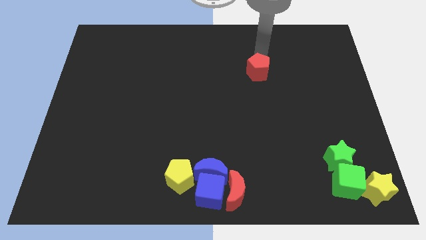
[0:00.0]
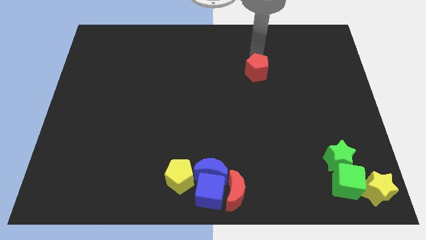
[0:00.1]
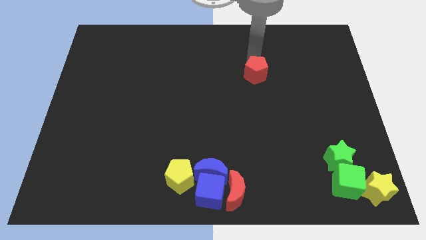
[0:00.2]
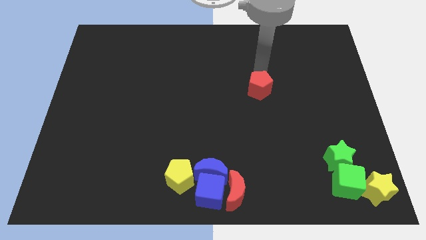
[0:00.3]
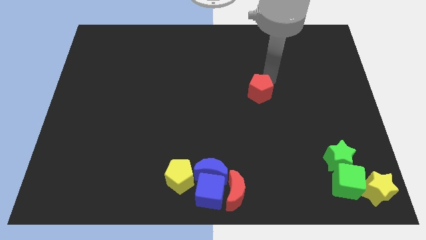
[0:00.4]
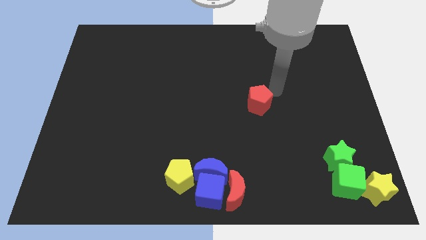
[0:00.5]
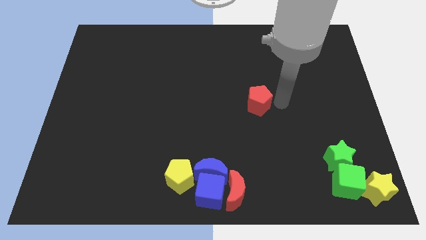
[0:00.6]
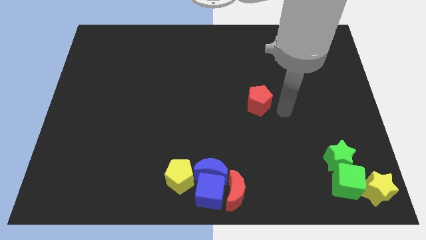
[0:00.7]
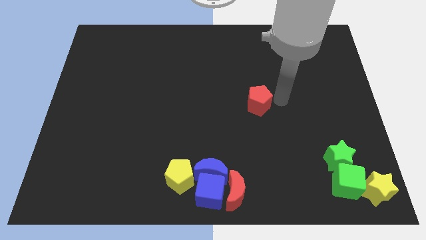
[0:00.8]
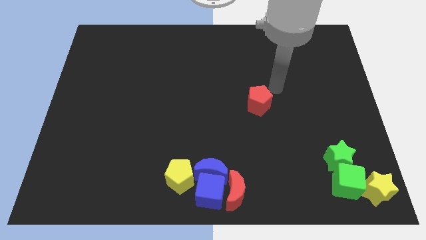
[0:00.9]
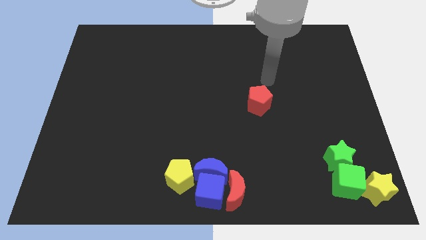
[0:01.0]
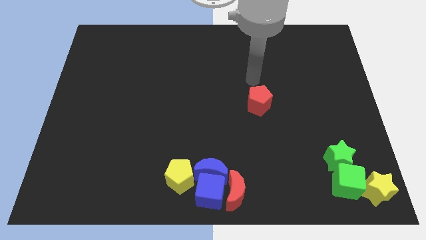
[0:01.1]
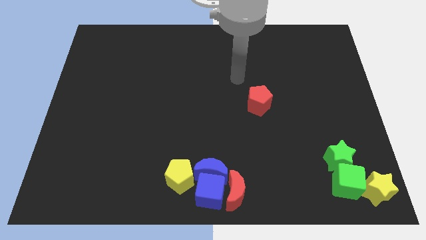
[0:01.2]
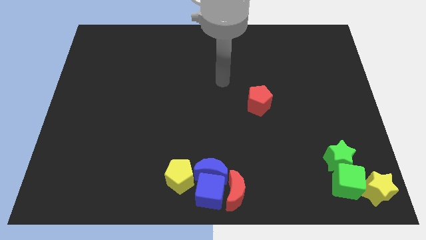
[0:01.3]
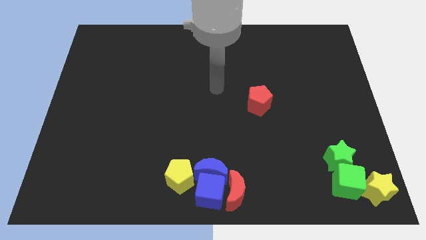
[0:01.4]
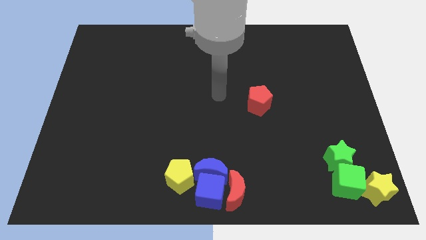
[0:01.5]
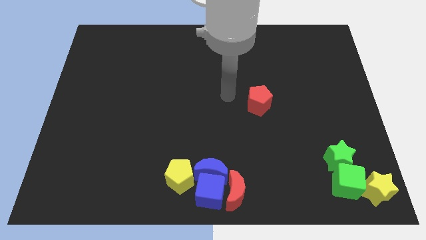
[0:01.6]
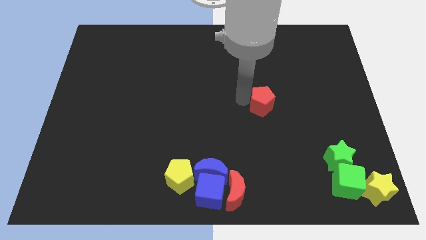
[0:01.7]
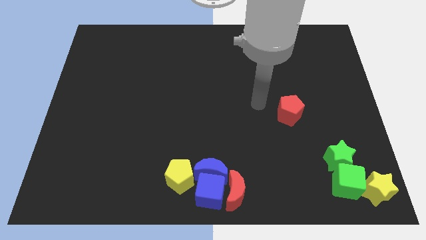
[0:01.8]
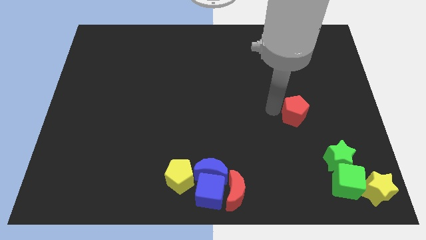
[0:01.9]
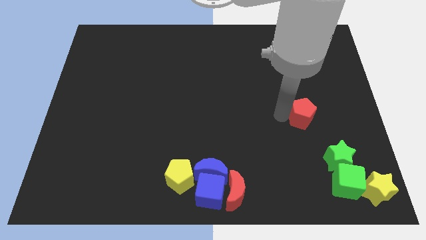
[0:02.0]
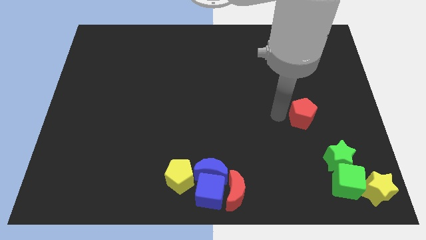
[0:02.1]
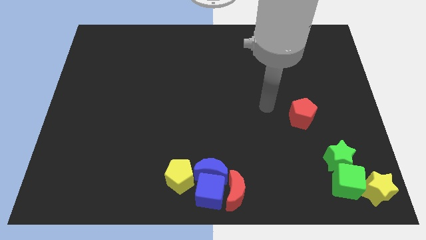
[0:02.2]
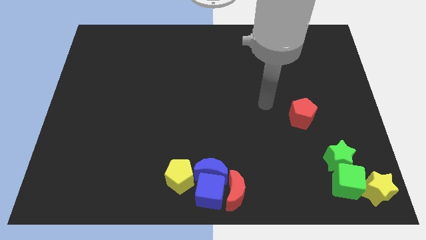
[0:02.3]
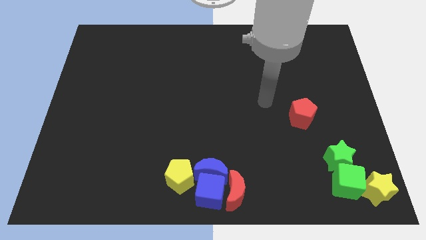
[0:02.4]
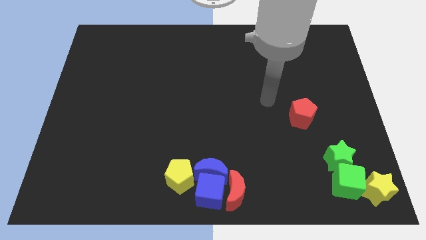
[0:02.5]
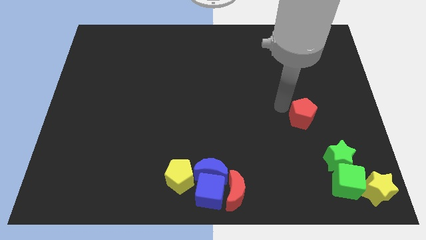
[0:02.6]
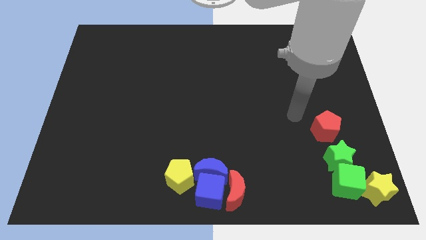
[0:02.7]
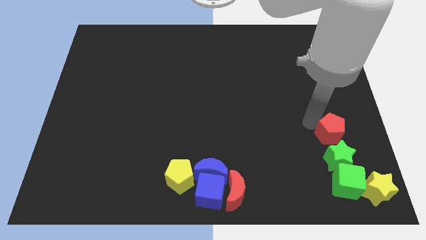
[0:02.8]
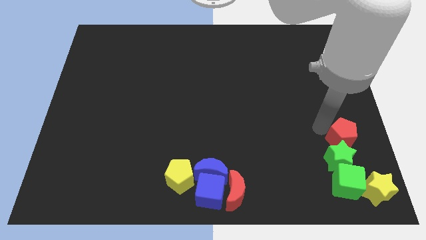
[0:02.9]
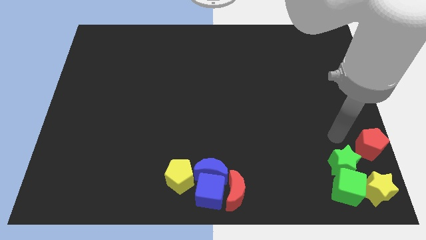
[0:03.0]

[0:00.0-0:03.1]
push the red pentagon towards the right bottom corner

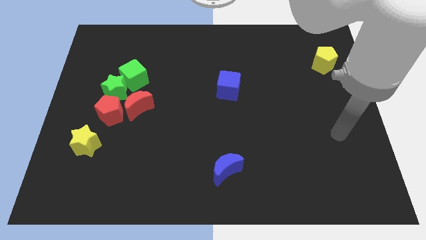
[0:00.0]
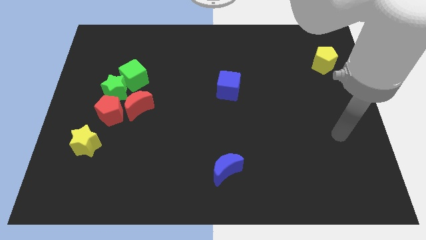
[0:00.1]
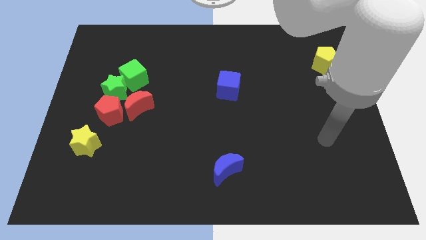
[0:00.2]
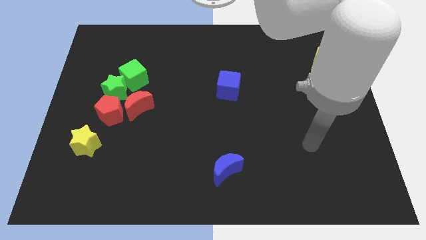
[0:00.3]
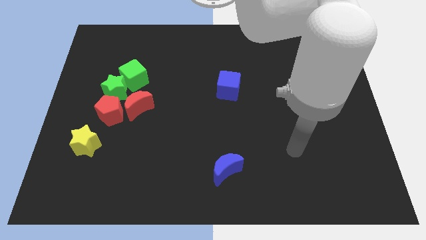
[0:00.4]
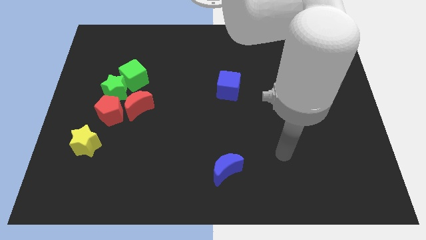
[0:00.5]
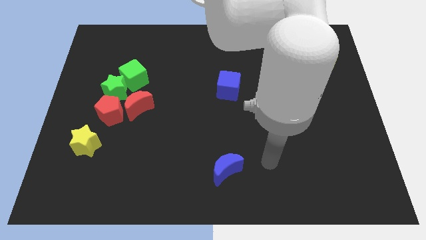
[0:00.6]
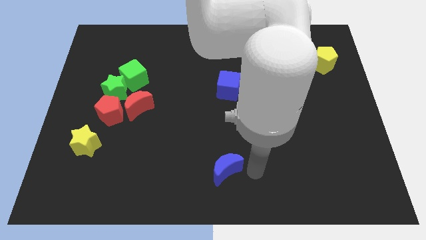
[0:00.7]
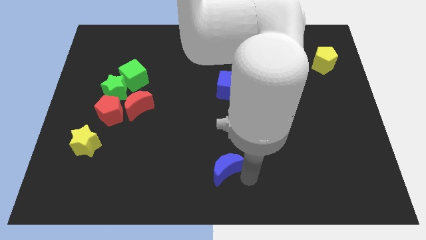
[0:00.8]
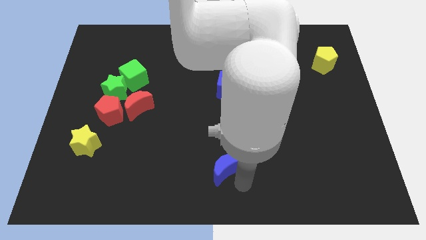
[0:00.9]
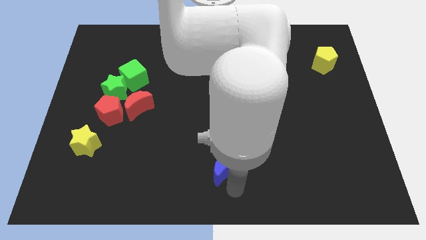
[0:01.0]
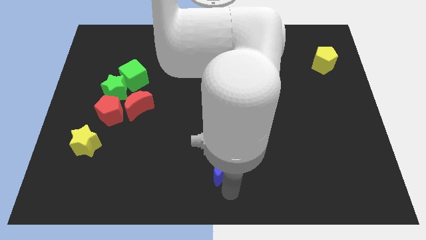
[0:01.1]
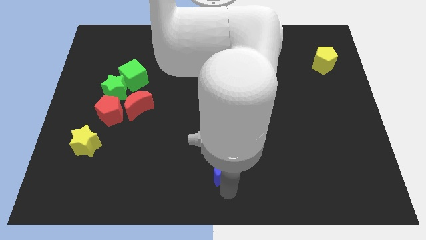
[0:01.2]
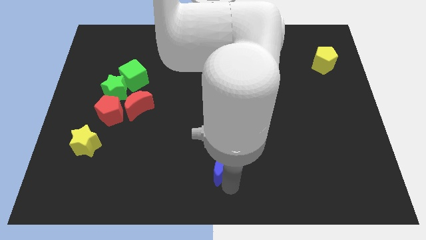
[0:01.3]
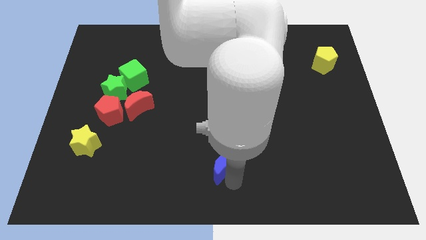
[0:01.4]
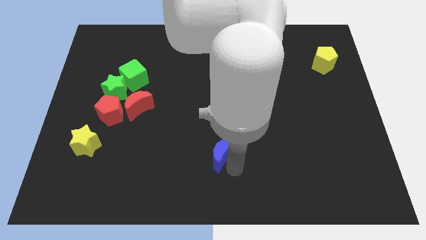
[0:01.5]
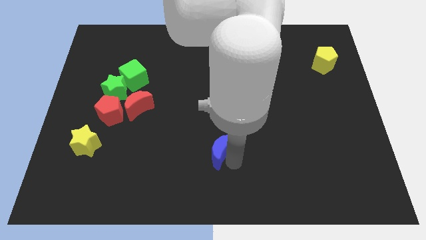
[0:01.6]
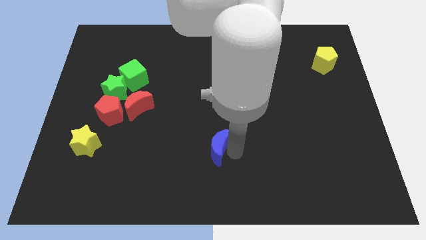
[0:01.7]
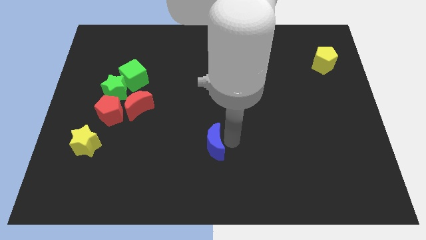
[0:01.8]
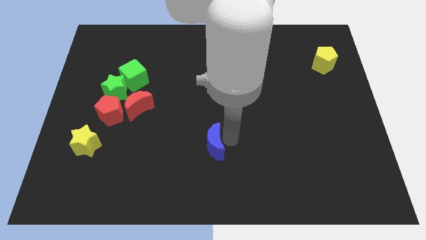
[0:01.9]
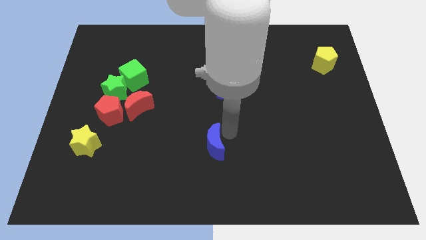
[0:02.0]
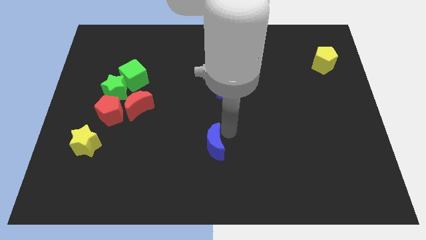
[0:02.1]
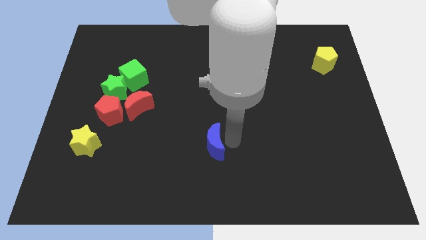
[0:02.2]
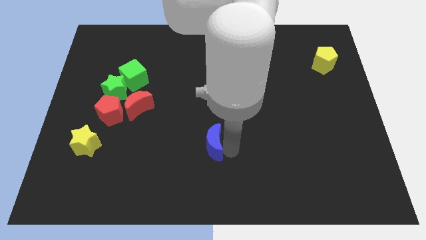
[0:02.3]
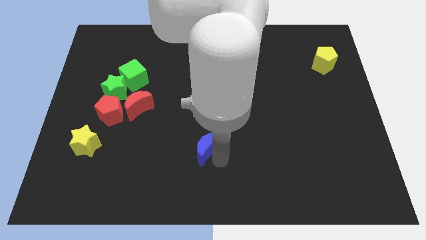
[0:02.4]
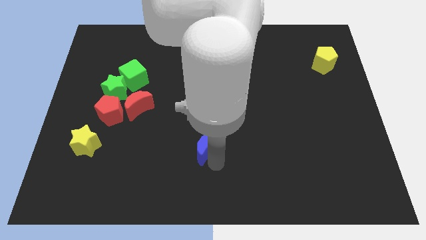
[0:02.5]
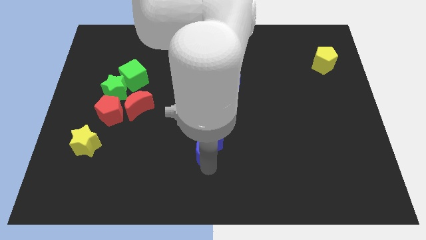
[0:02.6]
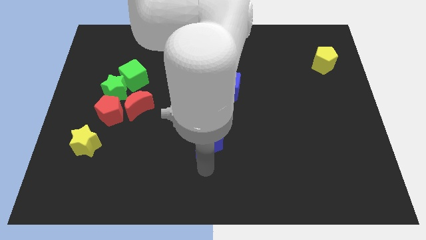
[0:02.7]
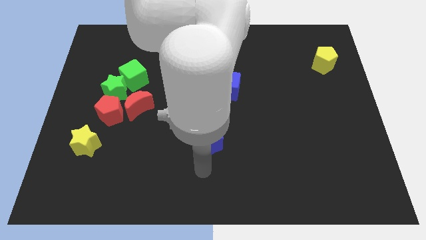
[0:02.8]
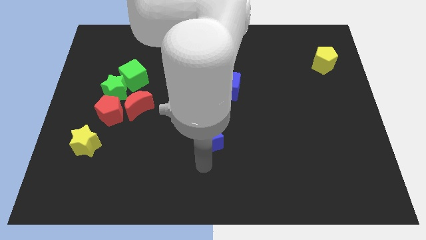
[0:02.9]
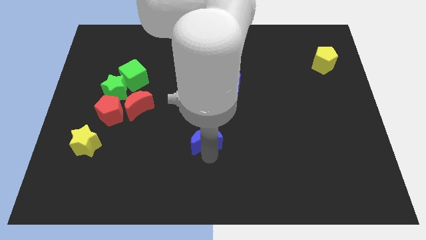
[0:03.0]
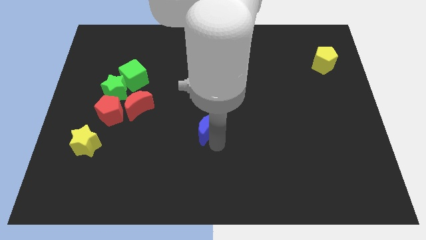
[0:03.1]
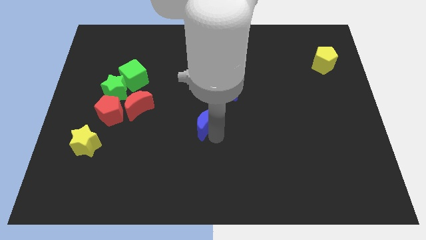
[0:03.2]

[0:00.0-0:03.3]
move the blue crescent towards the bottom side of the blue cube

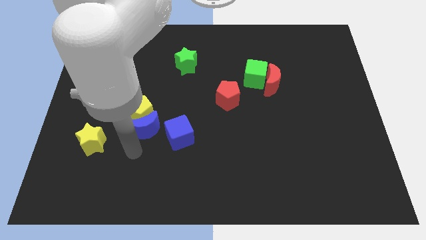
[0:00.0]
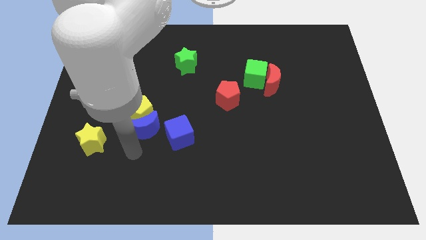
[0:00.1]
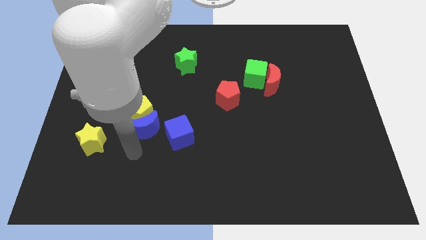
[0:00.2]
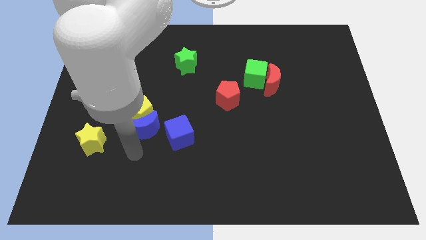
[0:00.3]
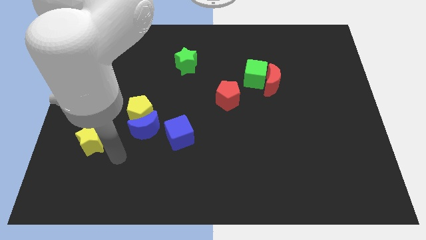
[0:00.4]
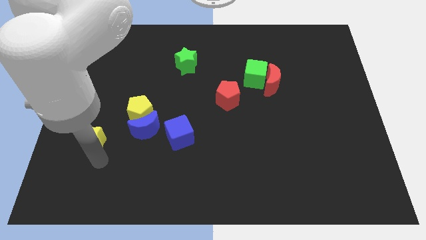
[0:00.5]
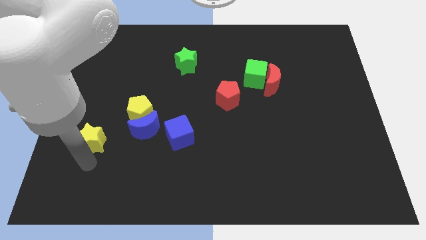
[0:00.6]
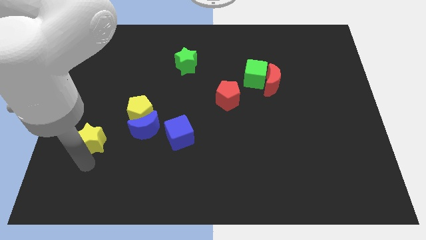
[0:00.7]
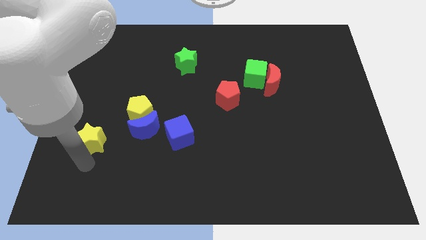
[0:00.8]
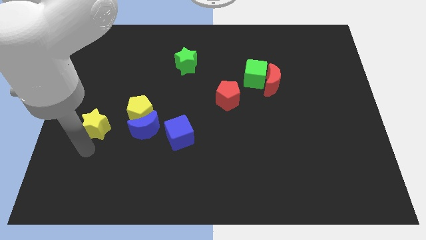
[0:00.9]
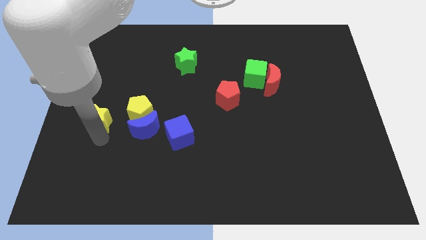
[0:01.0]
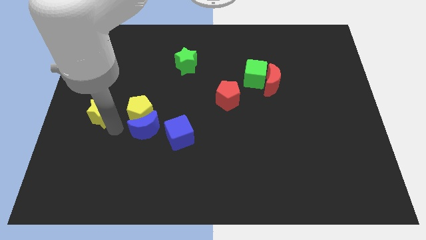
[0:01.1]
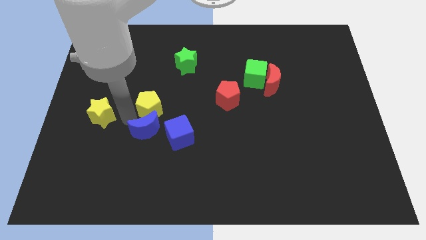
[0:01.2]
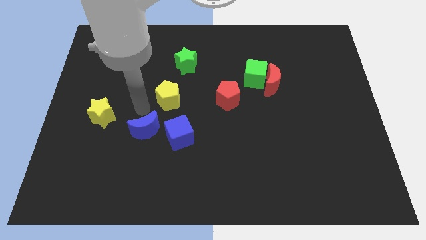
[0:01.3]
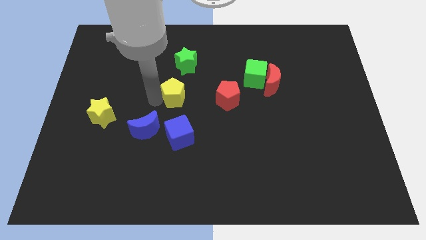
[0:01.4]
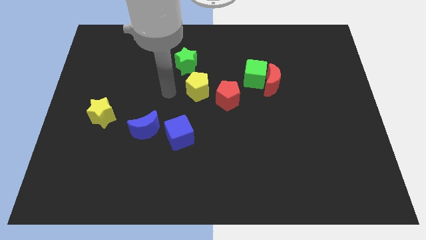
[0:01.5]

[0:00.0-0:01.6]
move yellow star slightly upwards

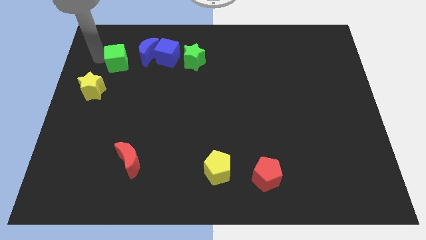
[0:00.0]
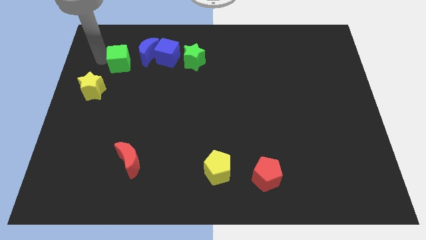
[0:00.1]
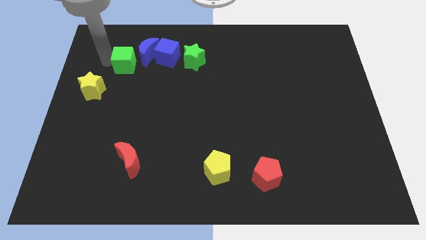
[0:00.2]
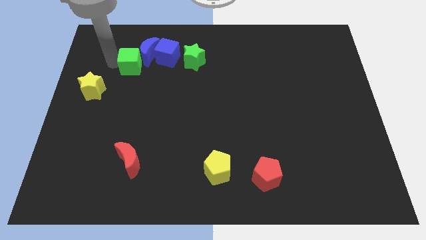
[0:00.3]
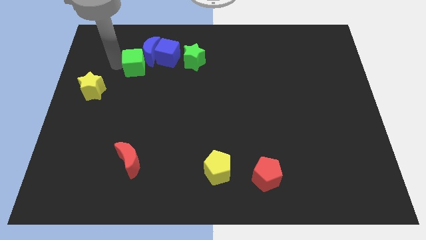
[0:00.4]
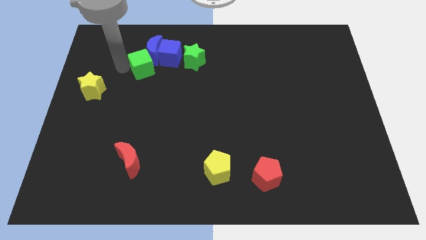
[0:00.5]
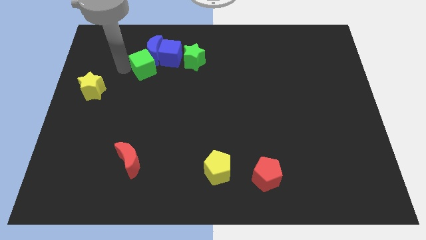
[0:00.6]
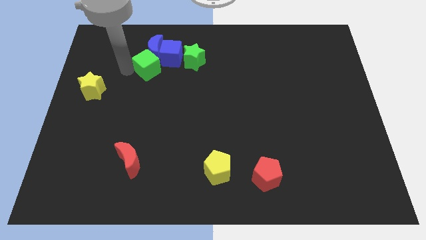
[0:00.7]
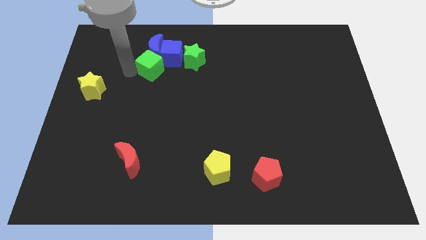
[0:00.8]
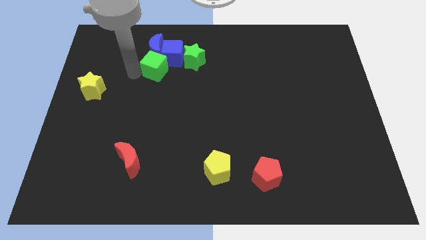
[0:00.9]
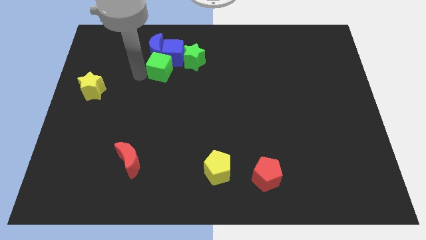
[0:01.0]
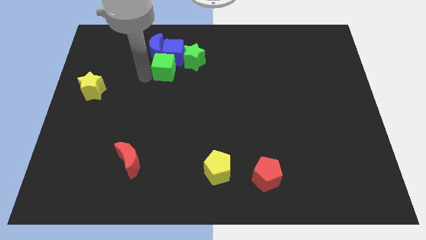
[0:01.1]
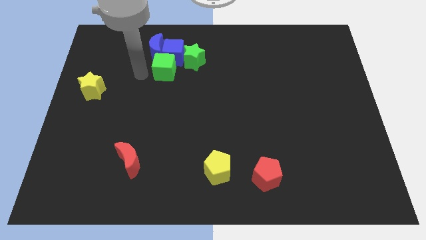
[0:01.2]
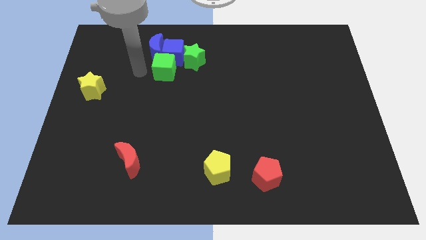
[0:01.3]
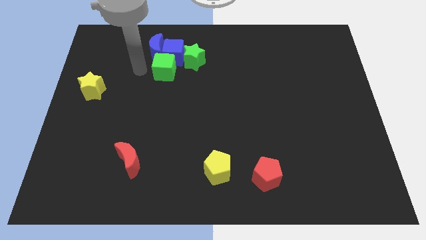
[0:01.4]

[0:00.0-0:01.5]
place the green cube below the blue cube
